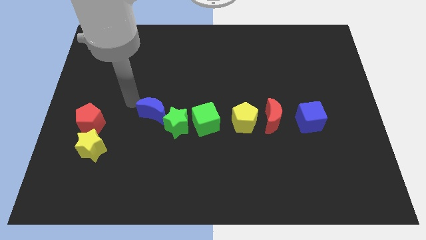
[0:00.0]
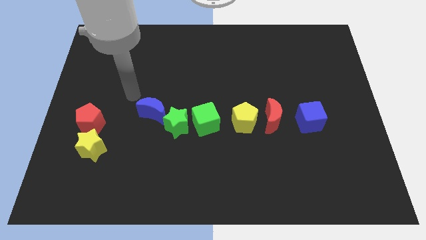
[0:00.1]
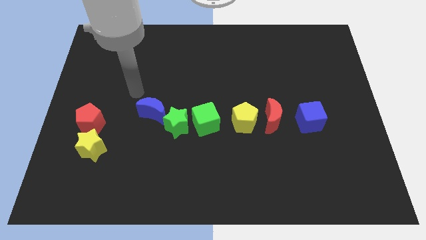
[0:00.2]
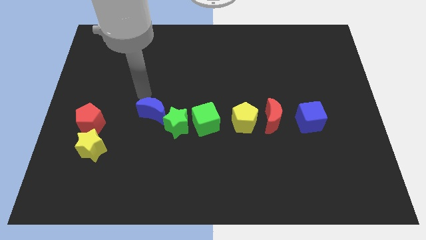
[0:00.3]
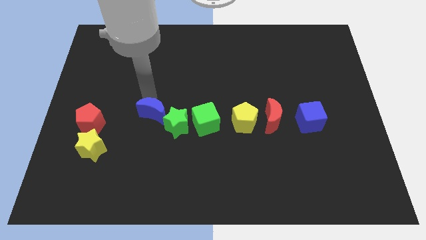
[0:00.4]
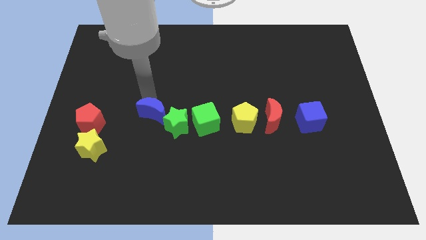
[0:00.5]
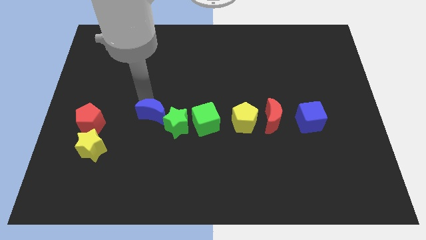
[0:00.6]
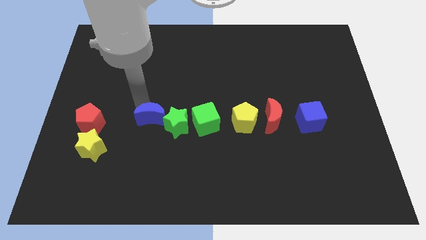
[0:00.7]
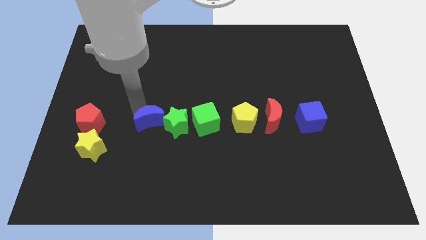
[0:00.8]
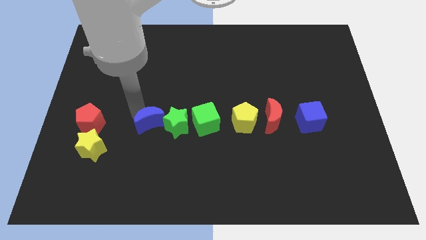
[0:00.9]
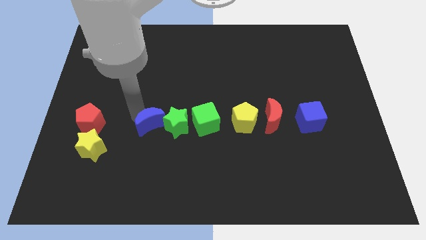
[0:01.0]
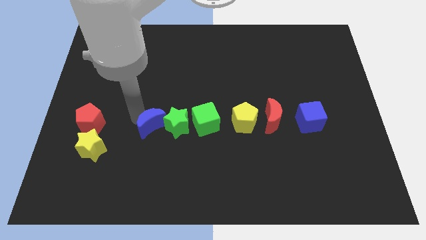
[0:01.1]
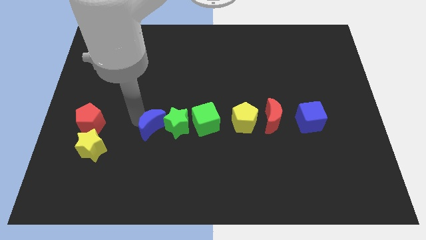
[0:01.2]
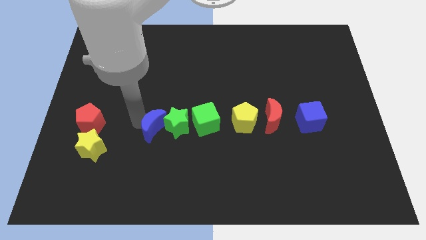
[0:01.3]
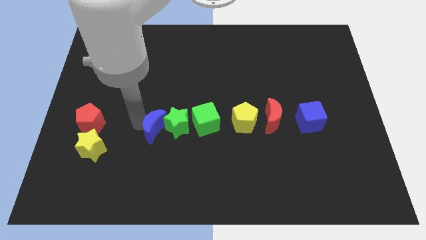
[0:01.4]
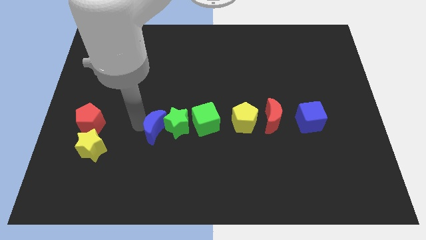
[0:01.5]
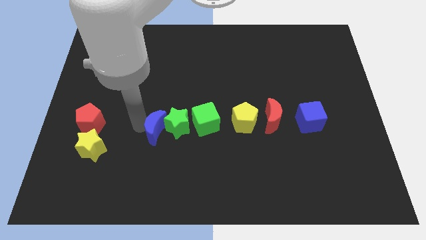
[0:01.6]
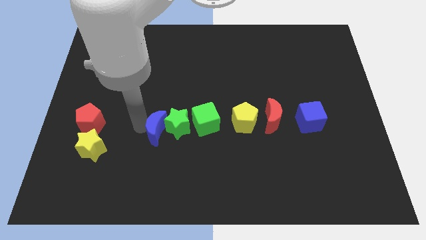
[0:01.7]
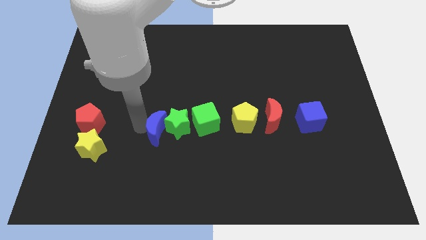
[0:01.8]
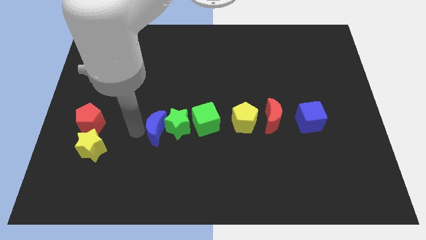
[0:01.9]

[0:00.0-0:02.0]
rotate the blue cube to form a horizontal line with the group of blocks

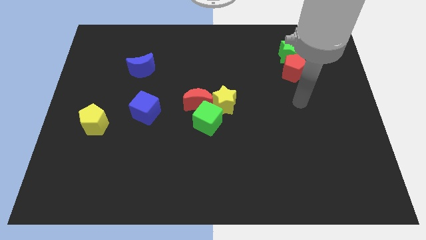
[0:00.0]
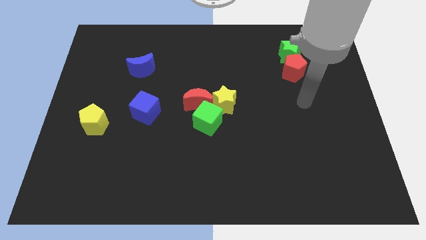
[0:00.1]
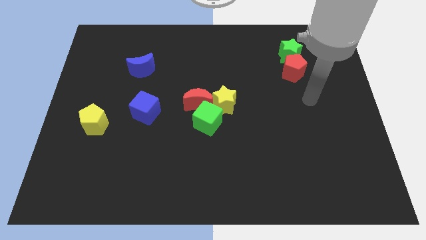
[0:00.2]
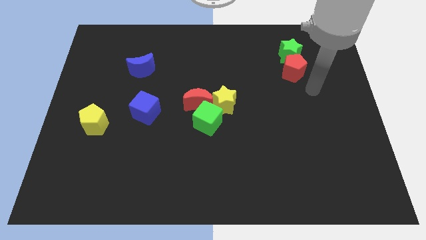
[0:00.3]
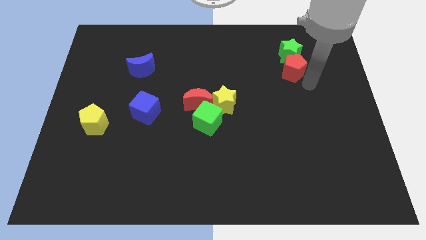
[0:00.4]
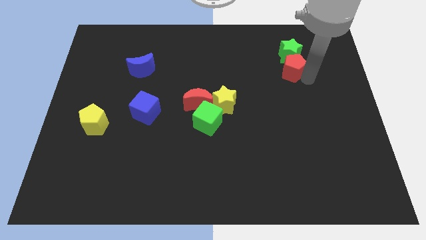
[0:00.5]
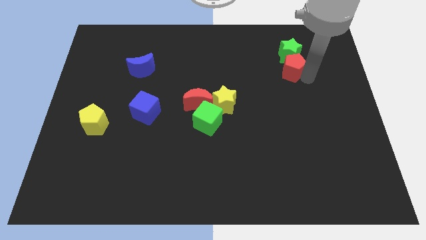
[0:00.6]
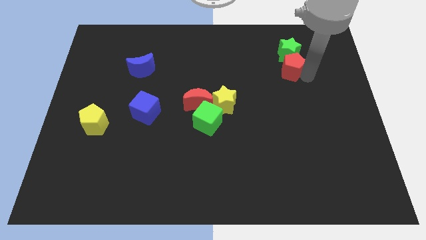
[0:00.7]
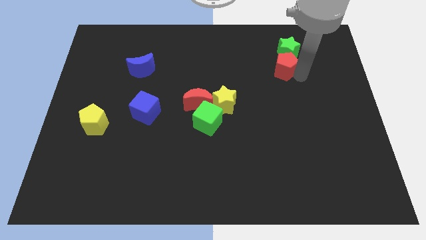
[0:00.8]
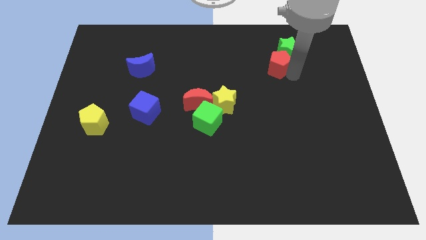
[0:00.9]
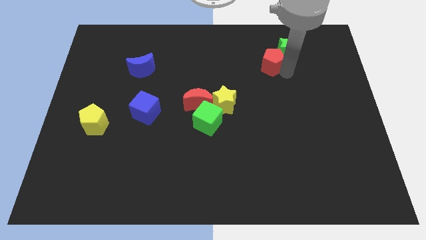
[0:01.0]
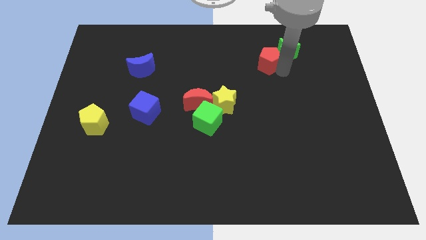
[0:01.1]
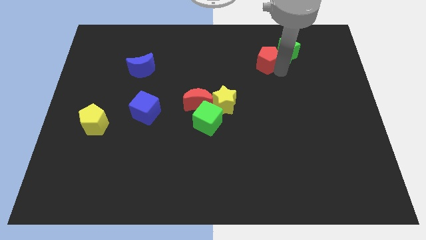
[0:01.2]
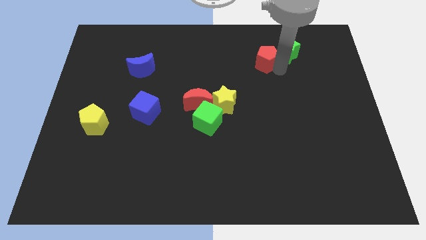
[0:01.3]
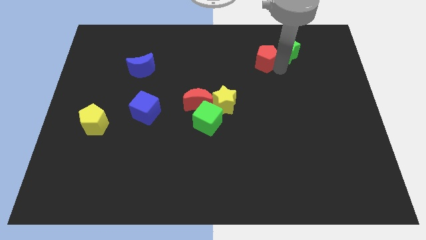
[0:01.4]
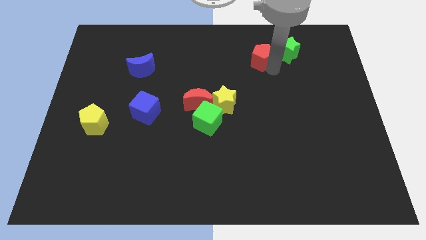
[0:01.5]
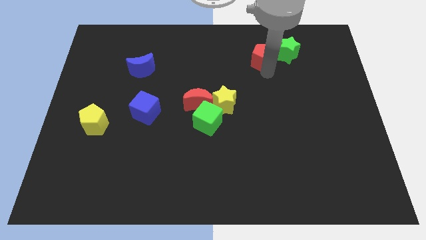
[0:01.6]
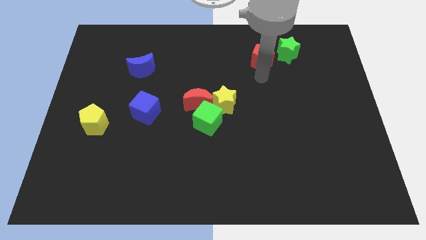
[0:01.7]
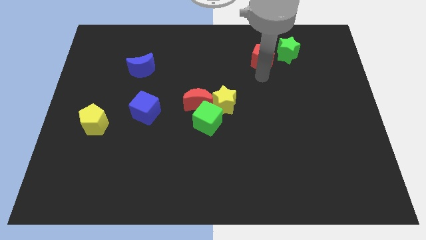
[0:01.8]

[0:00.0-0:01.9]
separate the red pentagon away from the green star

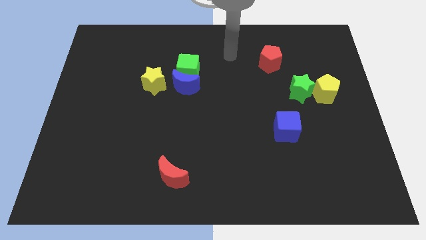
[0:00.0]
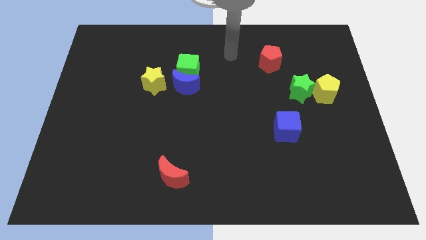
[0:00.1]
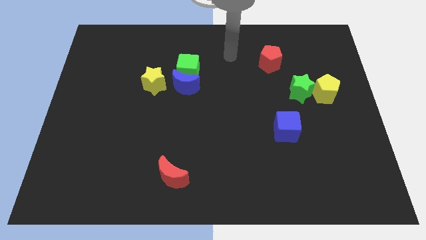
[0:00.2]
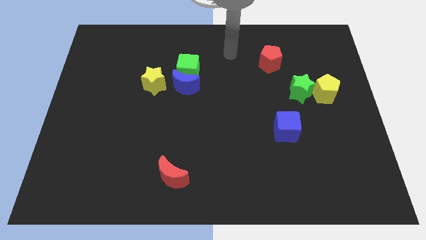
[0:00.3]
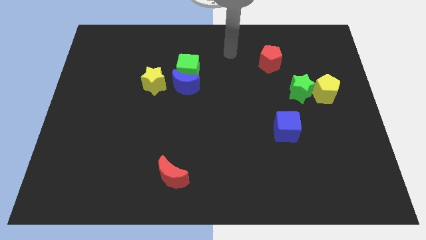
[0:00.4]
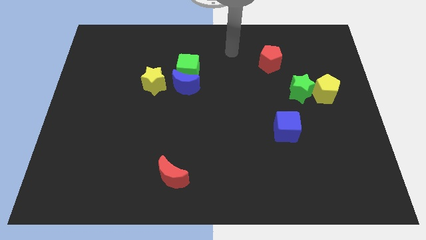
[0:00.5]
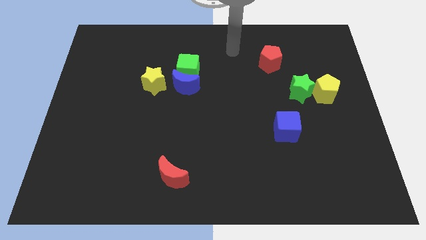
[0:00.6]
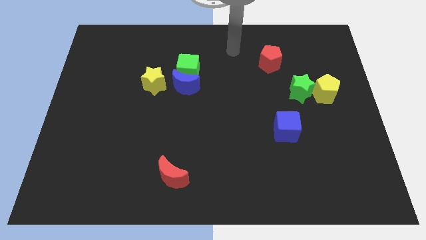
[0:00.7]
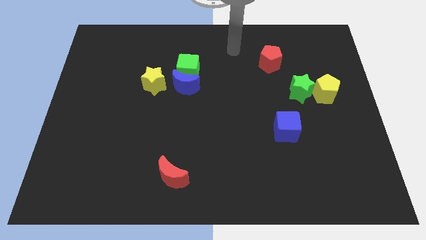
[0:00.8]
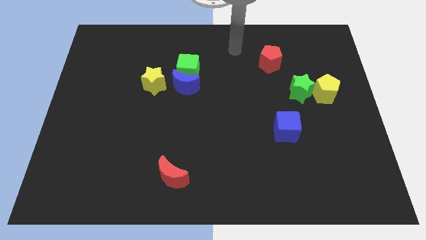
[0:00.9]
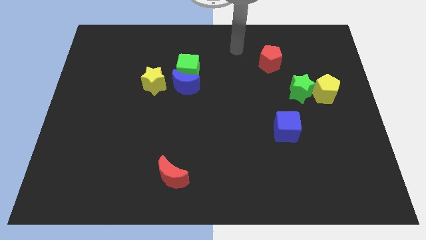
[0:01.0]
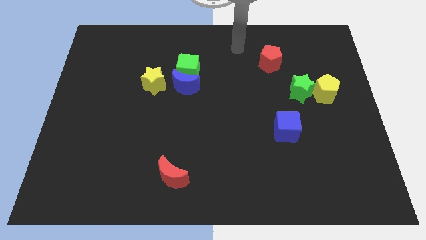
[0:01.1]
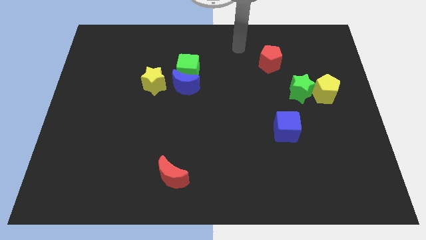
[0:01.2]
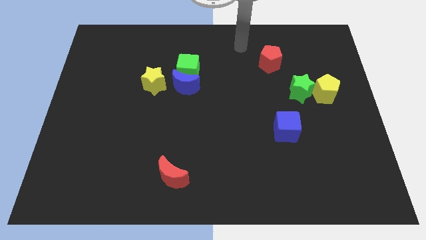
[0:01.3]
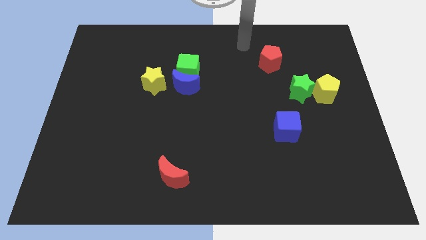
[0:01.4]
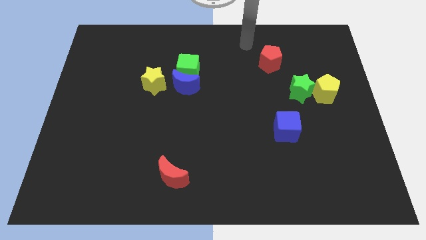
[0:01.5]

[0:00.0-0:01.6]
move arm vertical to the top left to the red pentagon

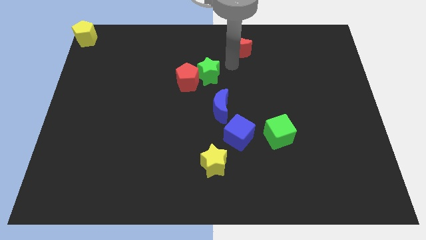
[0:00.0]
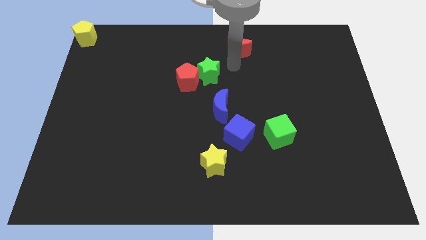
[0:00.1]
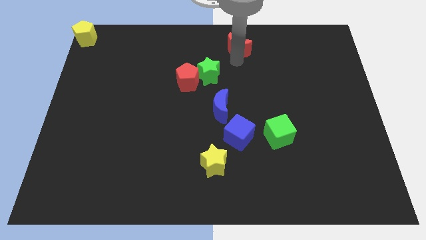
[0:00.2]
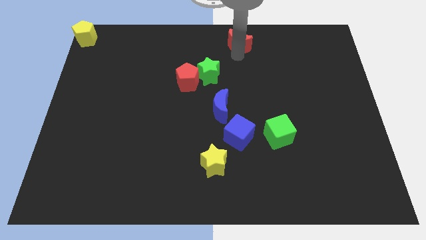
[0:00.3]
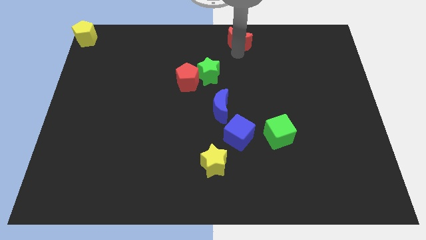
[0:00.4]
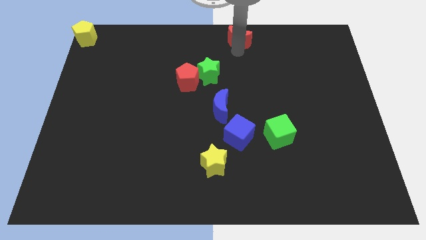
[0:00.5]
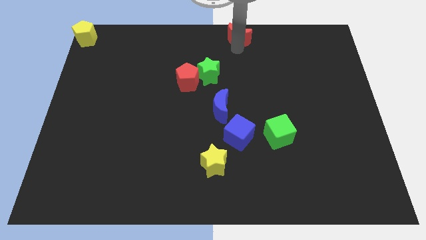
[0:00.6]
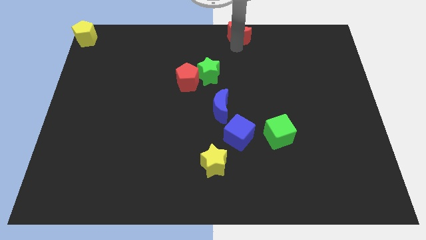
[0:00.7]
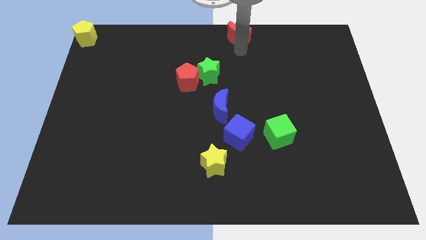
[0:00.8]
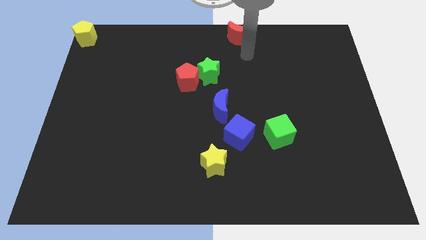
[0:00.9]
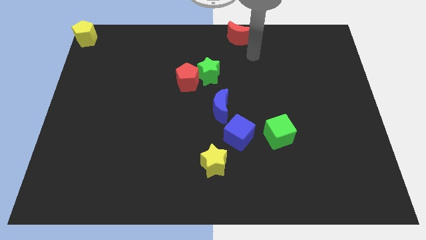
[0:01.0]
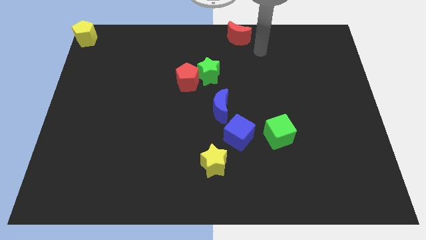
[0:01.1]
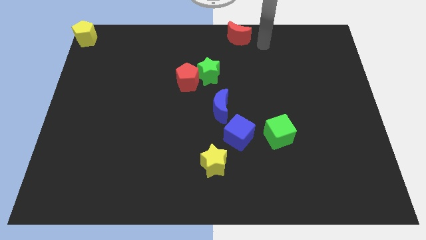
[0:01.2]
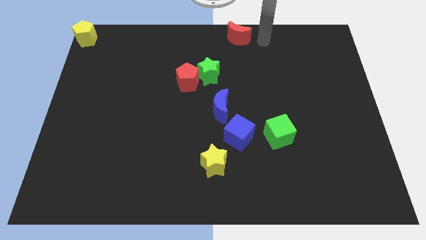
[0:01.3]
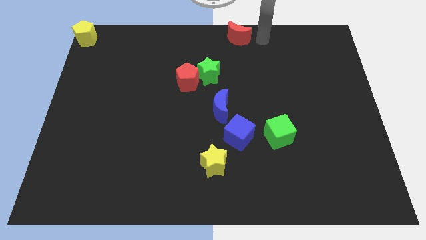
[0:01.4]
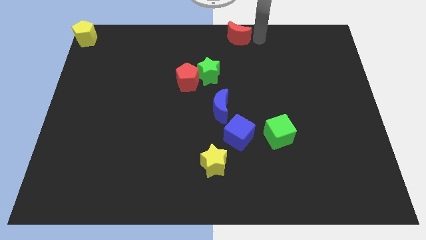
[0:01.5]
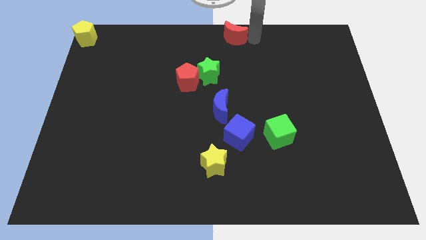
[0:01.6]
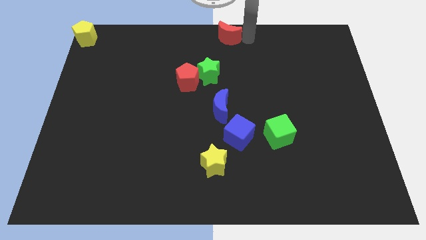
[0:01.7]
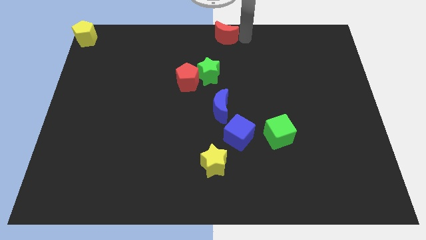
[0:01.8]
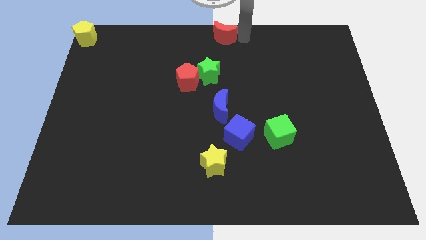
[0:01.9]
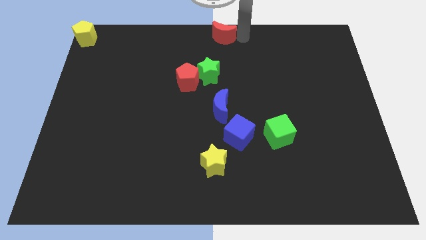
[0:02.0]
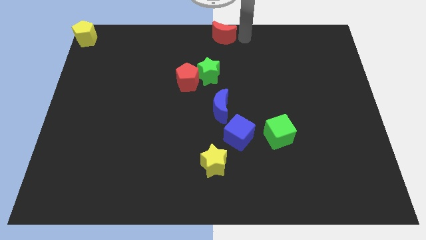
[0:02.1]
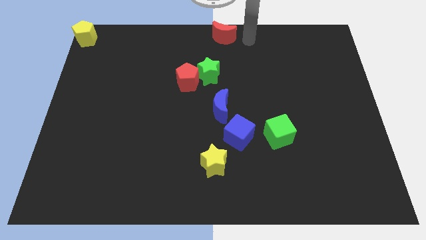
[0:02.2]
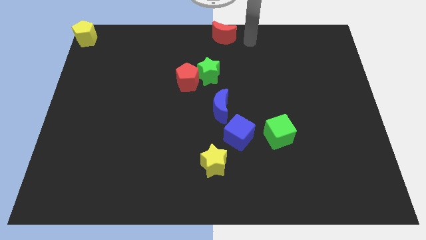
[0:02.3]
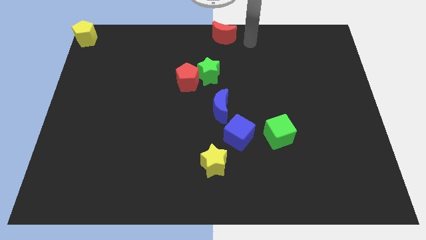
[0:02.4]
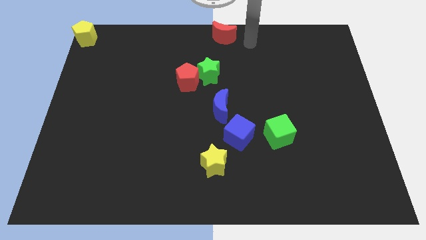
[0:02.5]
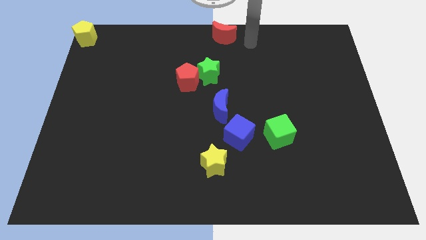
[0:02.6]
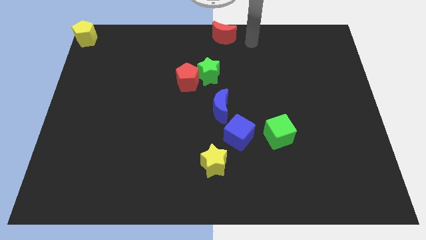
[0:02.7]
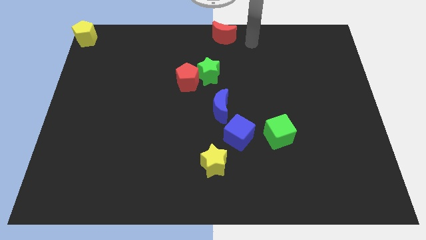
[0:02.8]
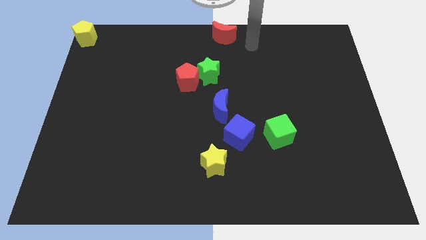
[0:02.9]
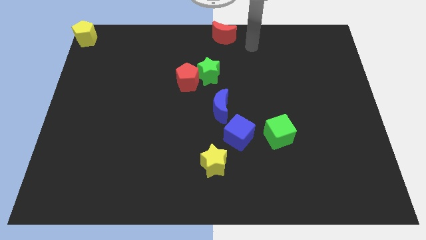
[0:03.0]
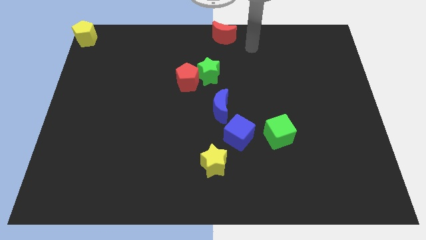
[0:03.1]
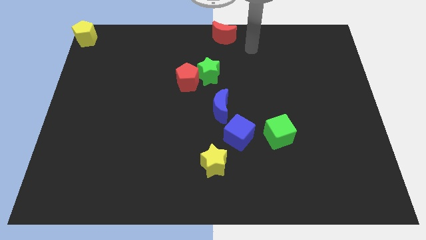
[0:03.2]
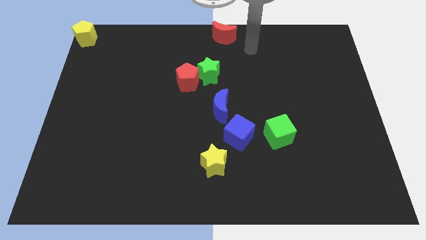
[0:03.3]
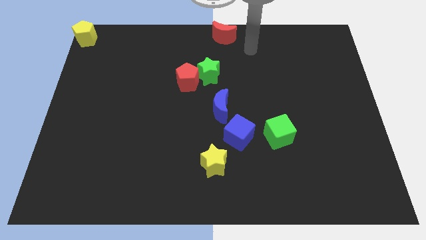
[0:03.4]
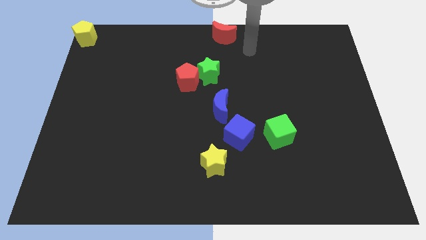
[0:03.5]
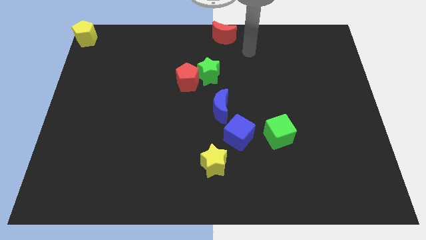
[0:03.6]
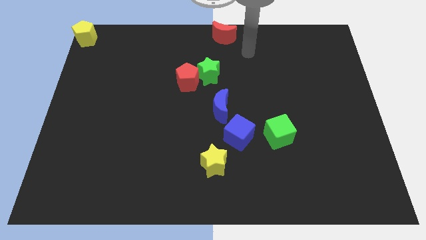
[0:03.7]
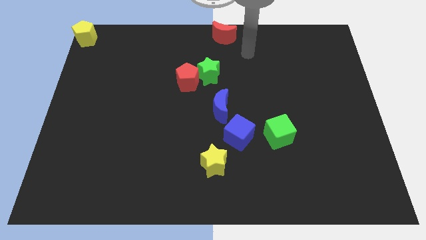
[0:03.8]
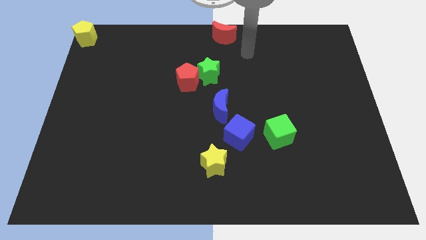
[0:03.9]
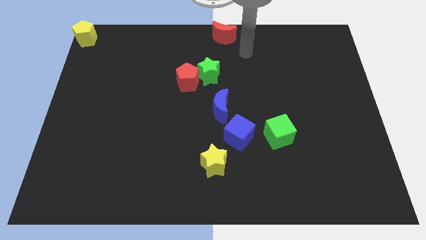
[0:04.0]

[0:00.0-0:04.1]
place the red crescent to top center
